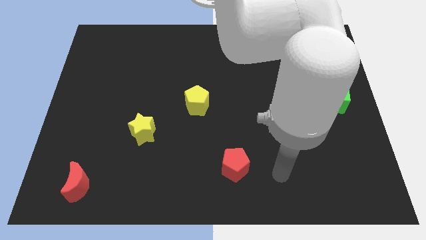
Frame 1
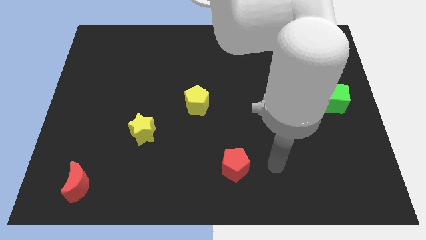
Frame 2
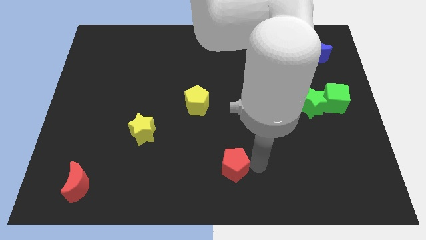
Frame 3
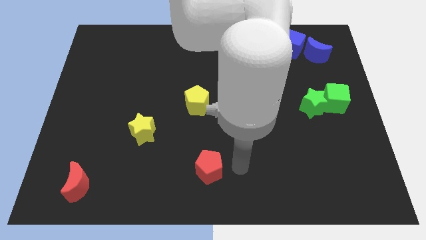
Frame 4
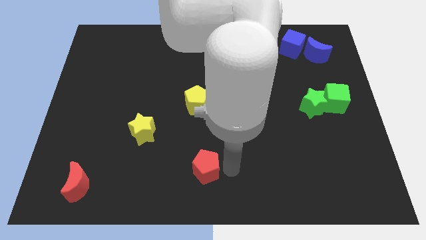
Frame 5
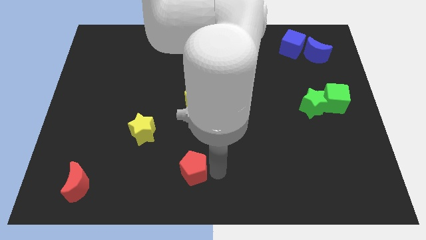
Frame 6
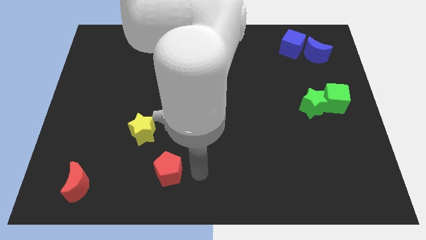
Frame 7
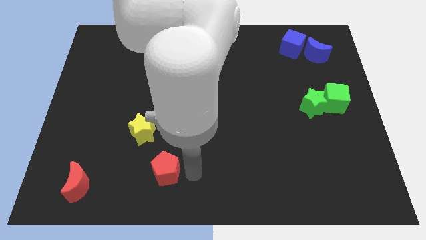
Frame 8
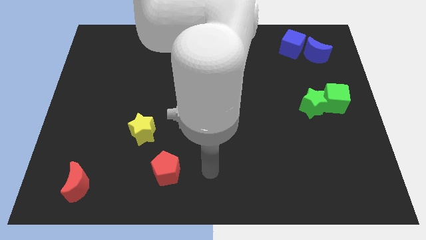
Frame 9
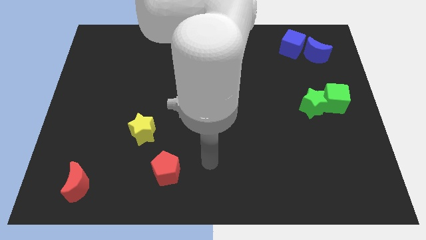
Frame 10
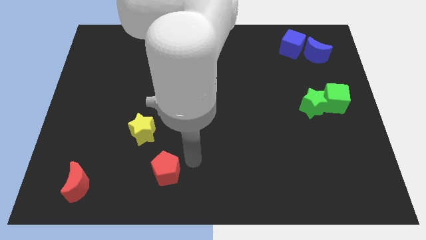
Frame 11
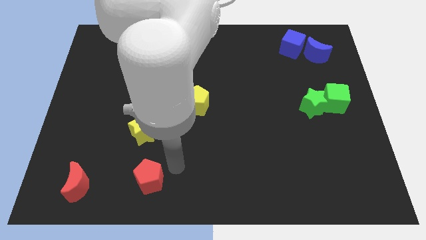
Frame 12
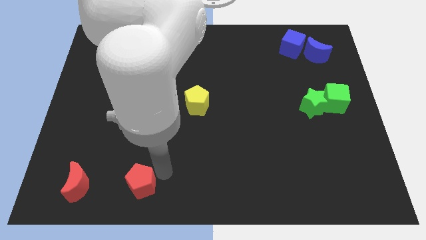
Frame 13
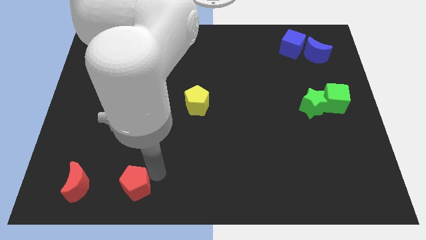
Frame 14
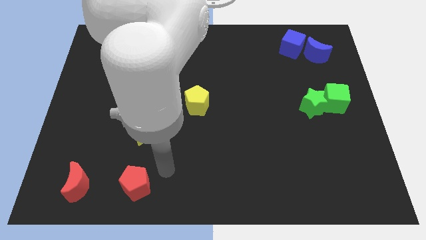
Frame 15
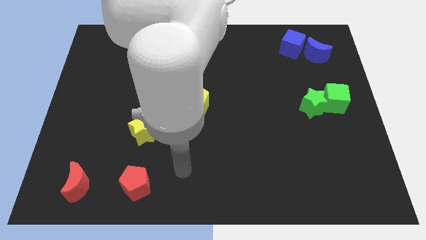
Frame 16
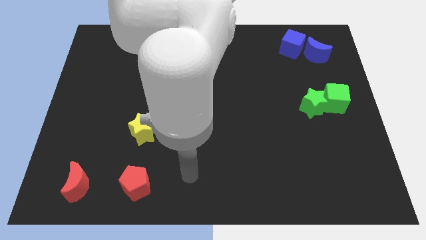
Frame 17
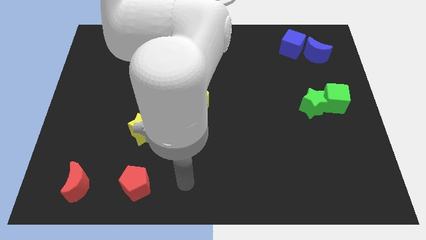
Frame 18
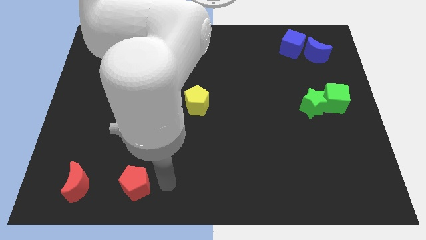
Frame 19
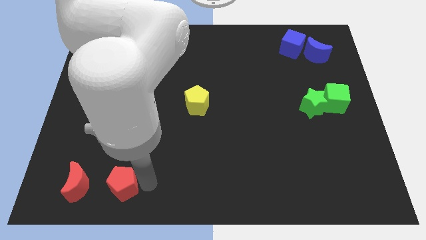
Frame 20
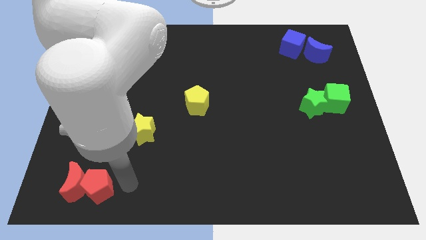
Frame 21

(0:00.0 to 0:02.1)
place the red pentagon right to the red crescent

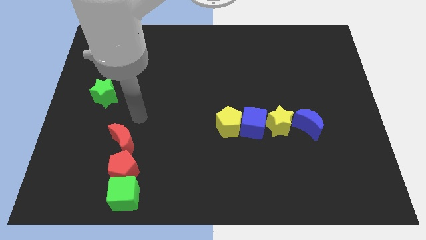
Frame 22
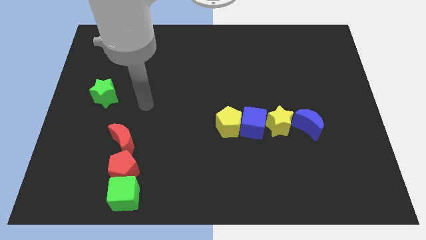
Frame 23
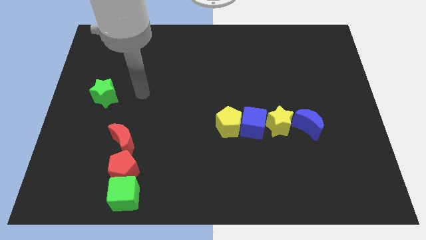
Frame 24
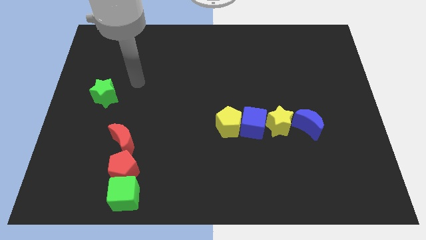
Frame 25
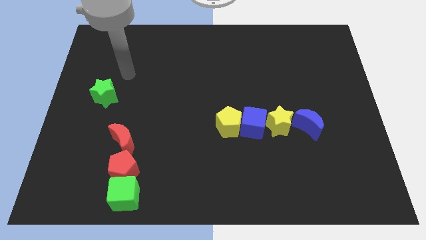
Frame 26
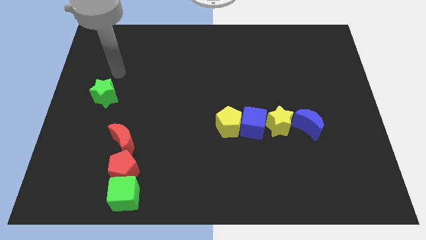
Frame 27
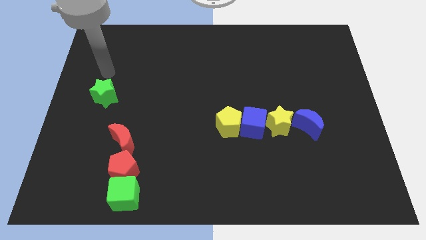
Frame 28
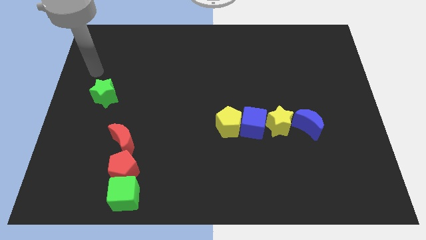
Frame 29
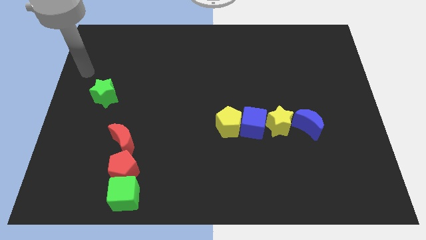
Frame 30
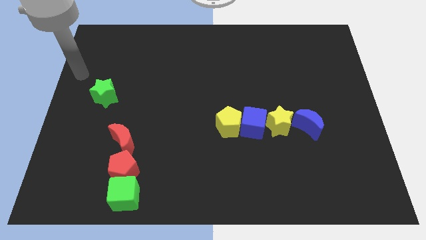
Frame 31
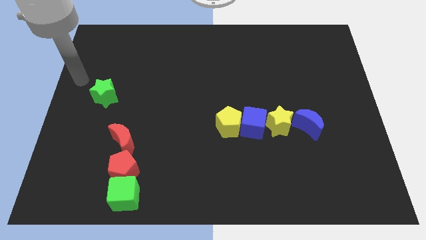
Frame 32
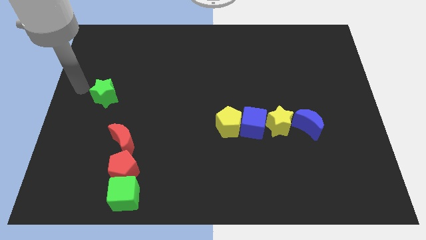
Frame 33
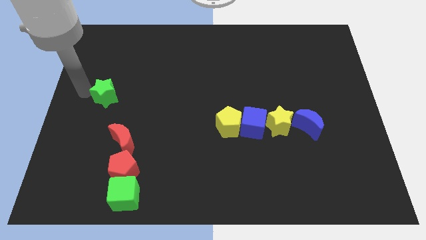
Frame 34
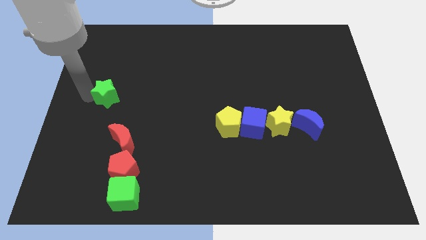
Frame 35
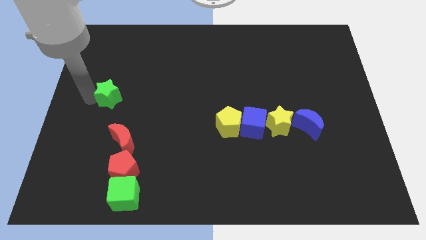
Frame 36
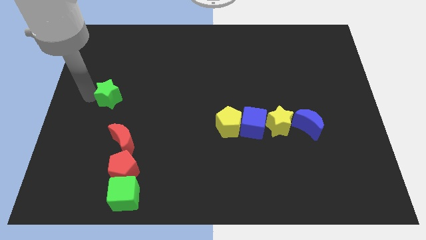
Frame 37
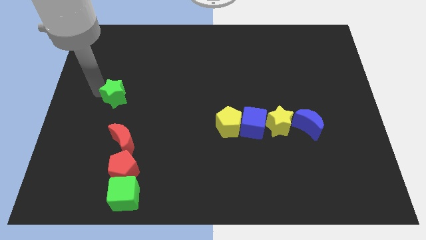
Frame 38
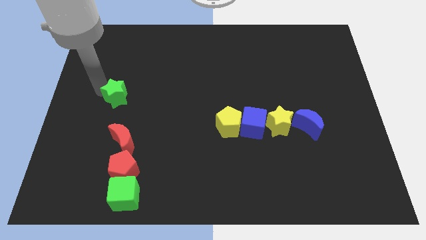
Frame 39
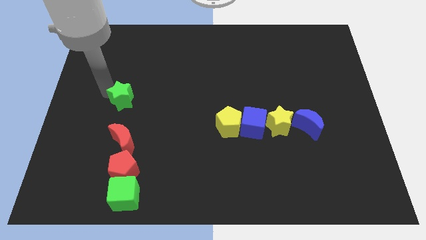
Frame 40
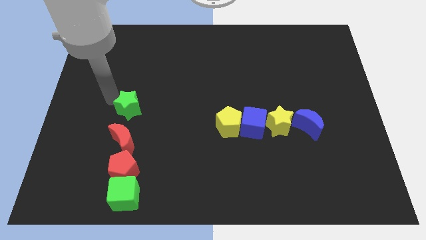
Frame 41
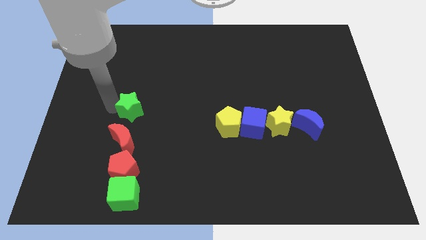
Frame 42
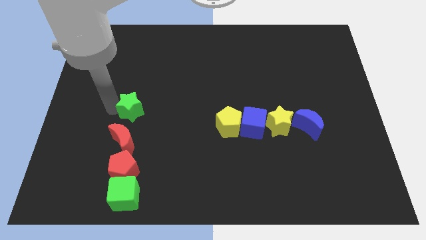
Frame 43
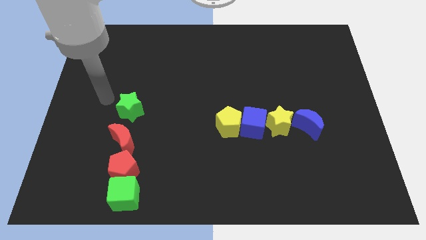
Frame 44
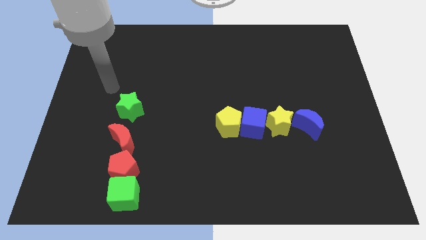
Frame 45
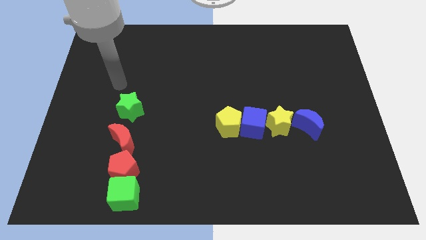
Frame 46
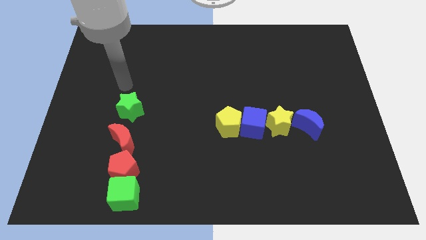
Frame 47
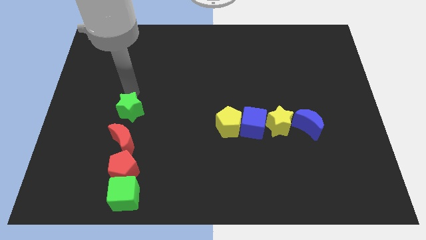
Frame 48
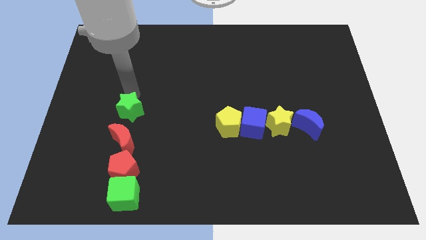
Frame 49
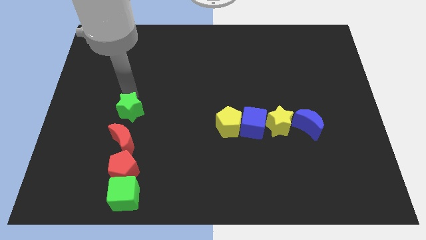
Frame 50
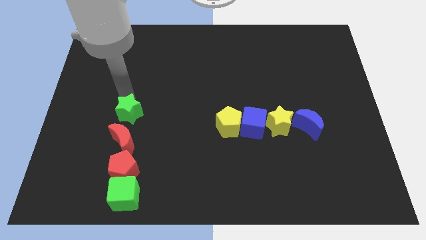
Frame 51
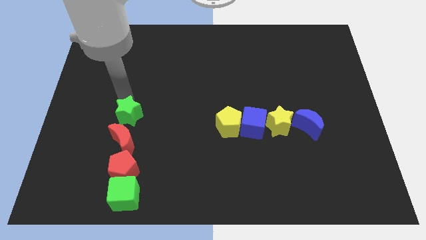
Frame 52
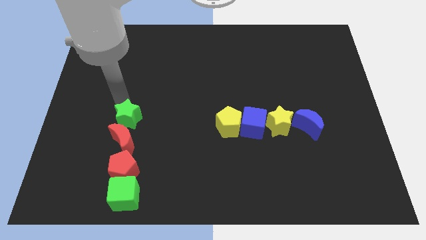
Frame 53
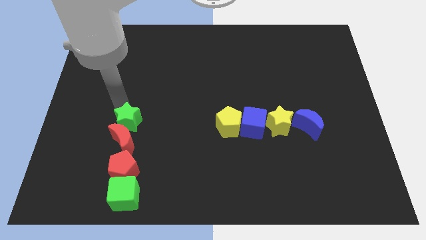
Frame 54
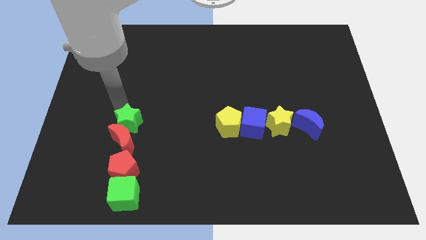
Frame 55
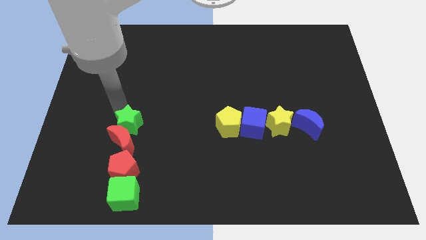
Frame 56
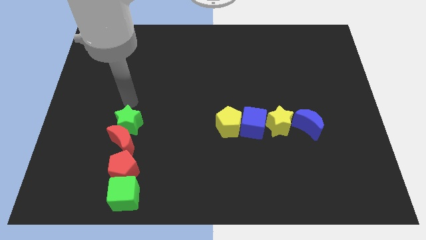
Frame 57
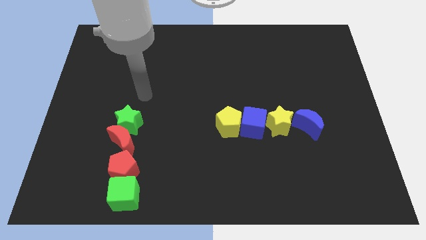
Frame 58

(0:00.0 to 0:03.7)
push the green star into the red moon

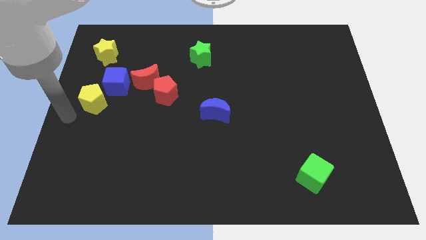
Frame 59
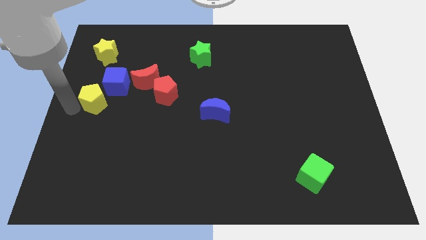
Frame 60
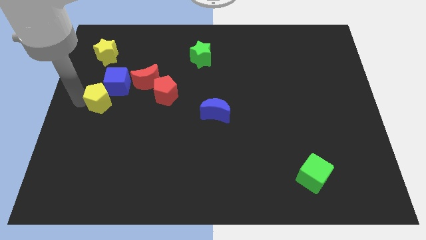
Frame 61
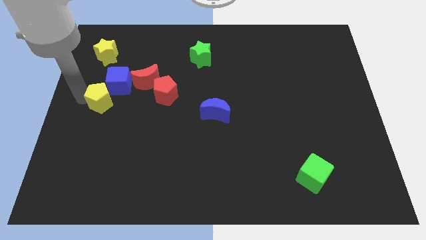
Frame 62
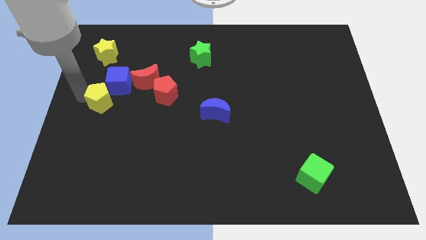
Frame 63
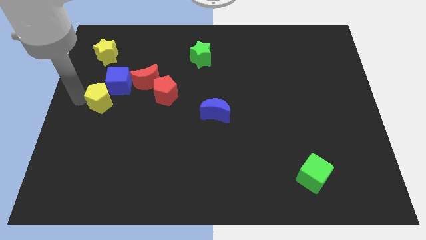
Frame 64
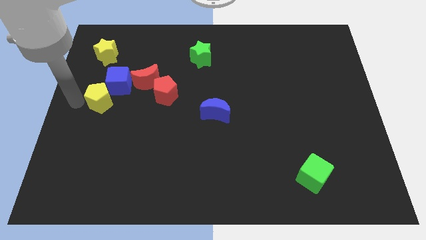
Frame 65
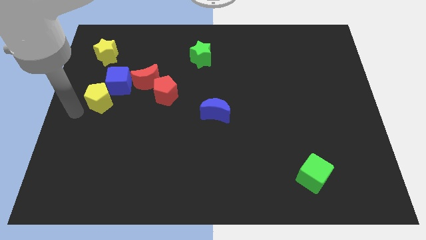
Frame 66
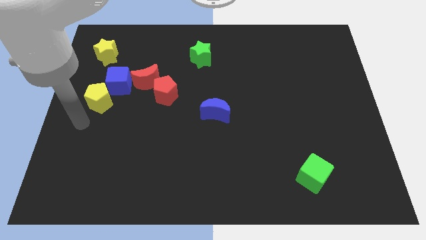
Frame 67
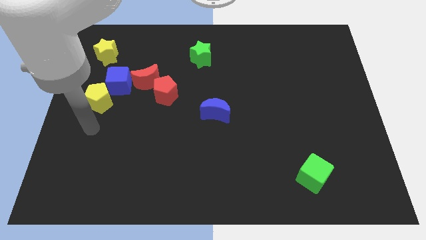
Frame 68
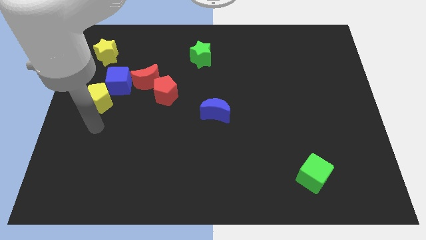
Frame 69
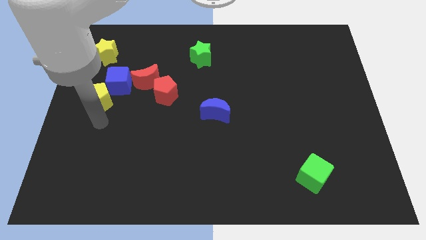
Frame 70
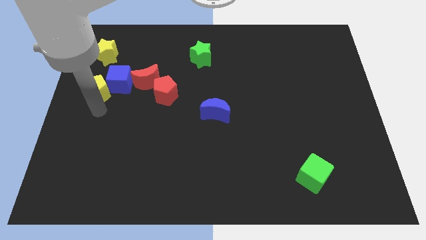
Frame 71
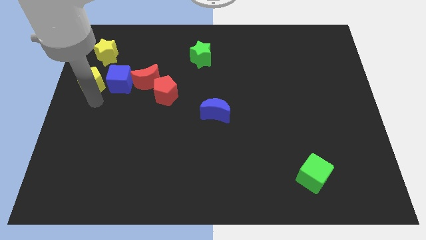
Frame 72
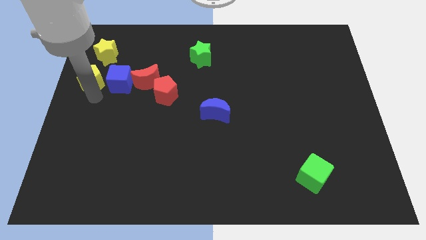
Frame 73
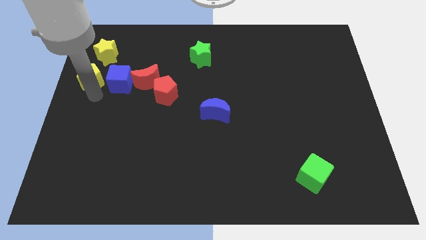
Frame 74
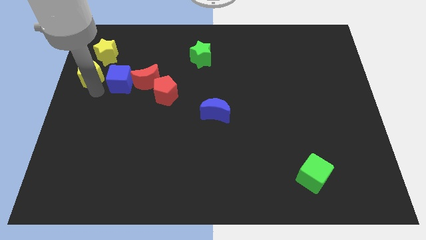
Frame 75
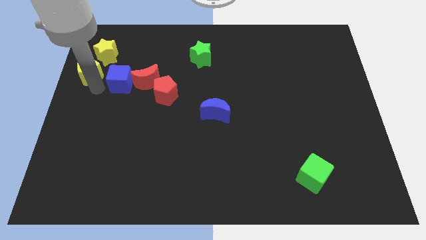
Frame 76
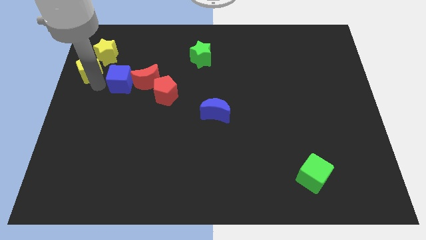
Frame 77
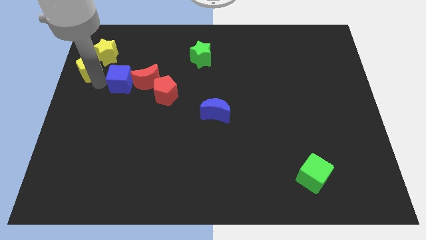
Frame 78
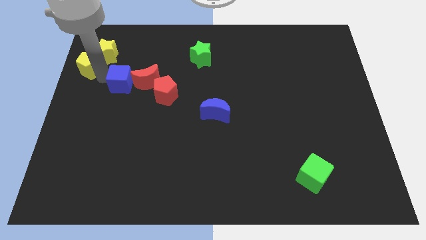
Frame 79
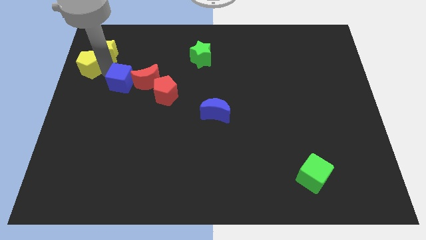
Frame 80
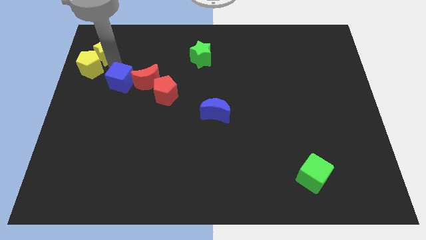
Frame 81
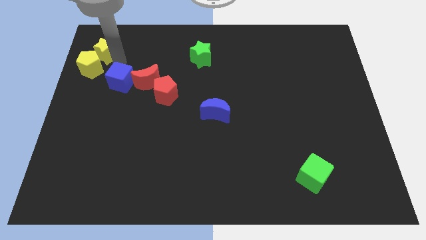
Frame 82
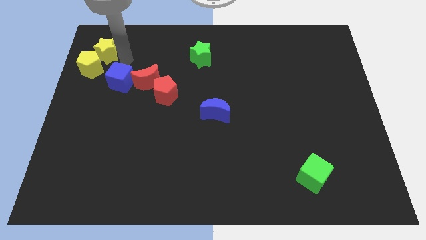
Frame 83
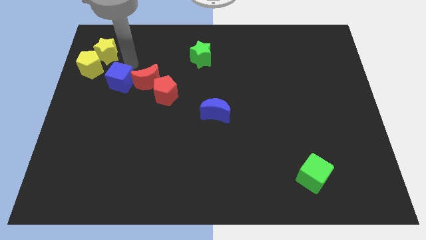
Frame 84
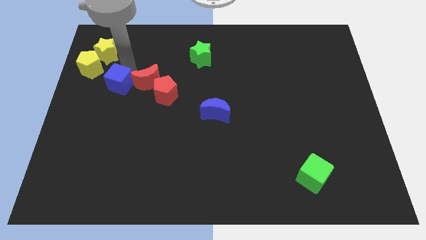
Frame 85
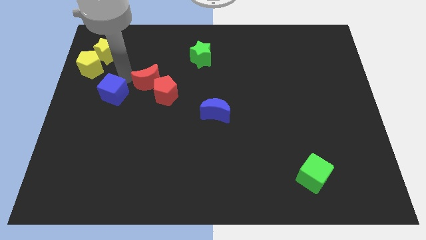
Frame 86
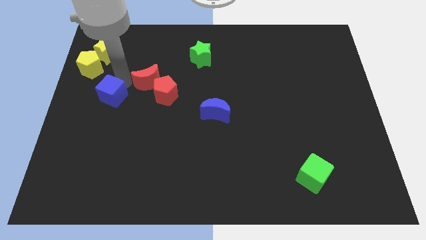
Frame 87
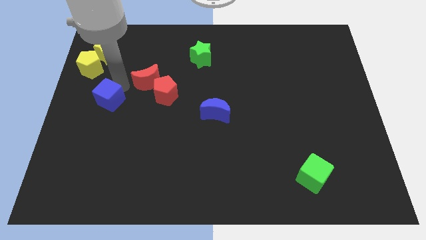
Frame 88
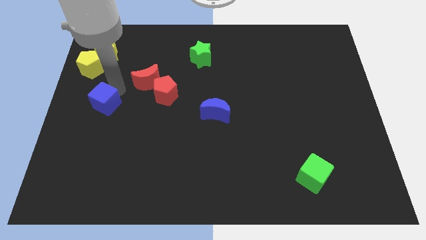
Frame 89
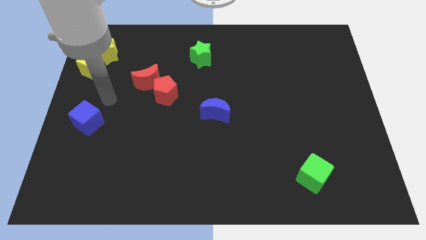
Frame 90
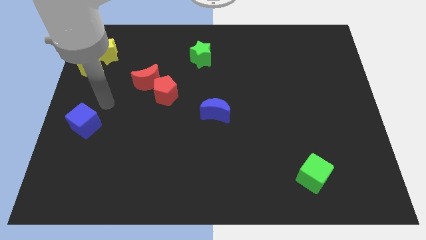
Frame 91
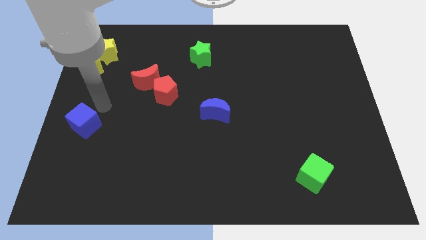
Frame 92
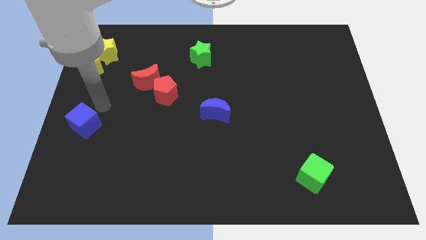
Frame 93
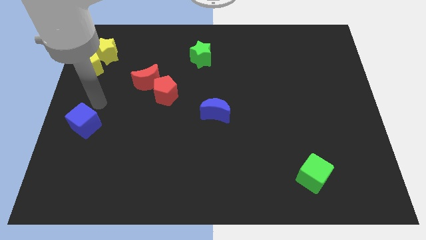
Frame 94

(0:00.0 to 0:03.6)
slide the blue cube to the centre left of the board
